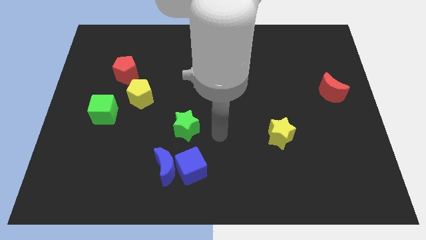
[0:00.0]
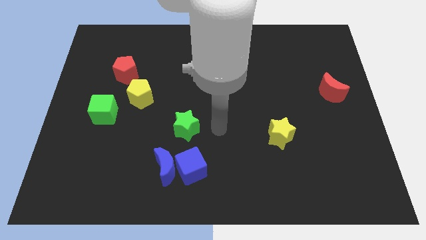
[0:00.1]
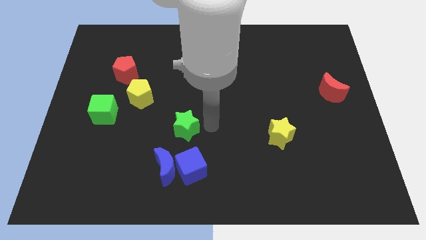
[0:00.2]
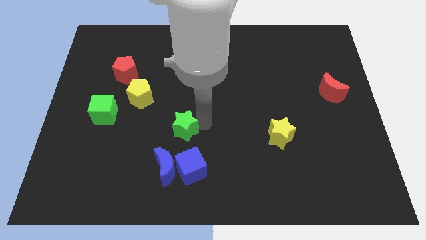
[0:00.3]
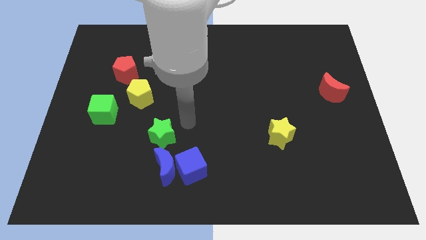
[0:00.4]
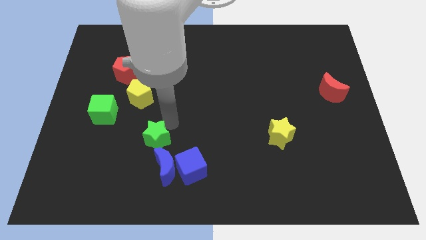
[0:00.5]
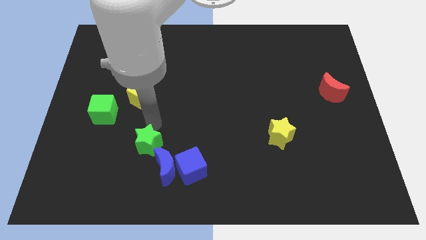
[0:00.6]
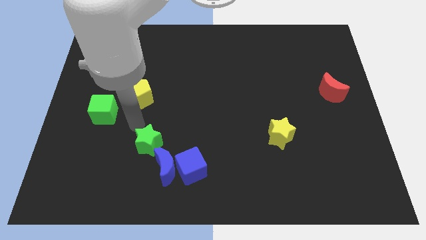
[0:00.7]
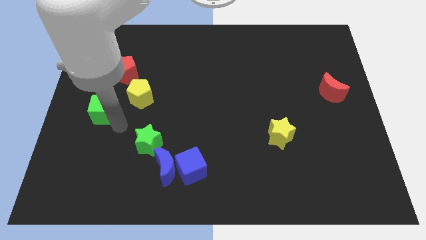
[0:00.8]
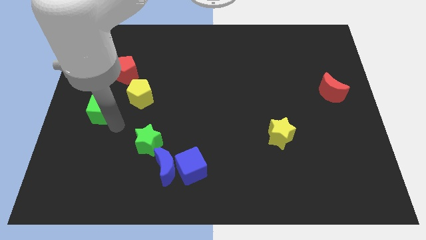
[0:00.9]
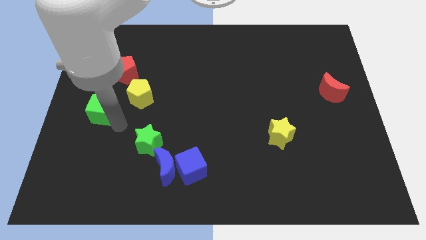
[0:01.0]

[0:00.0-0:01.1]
place your hand in between green blocks

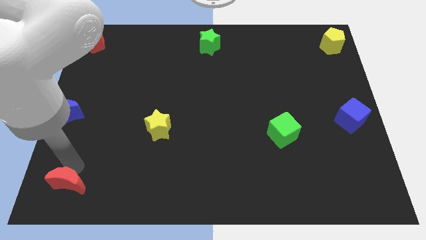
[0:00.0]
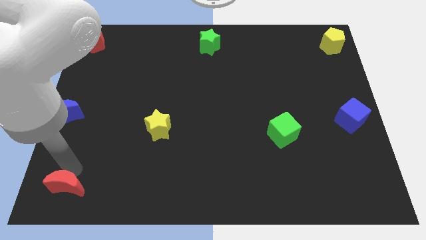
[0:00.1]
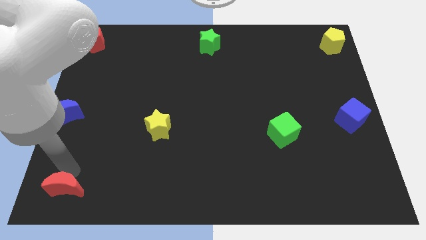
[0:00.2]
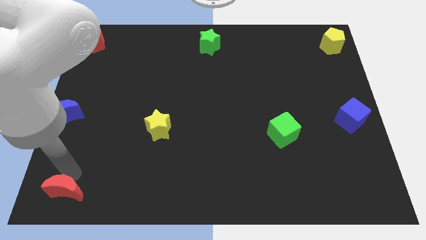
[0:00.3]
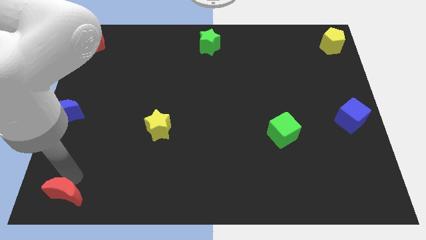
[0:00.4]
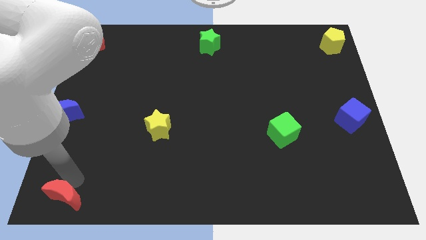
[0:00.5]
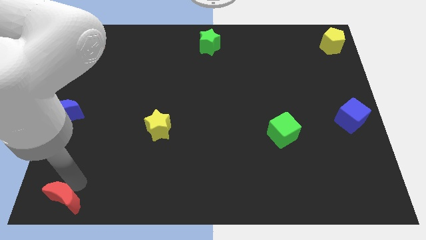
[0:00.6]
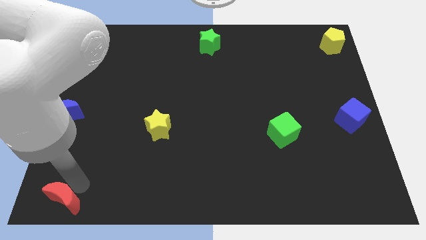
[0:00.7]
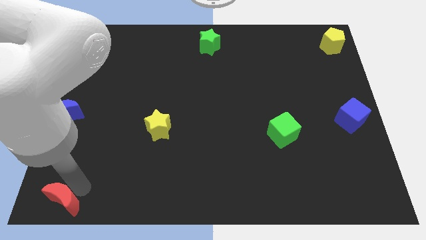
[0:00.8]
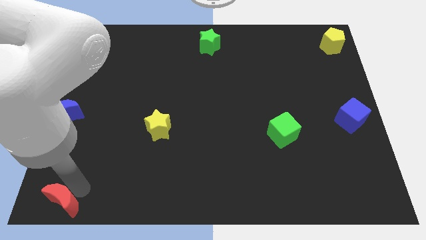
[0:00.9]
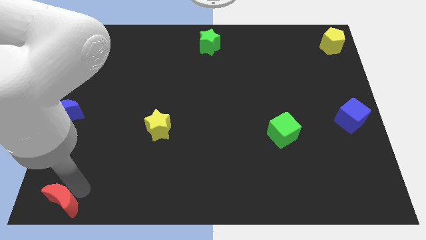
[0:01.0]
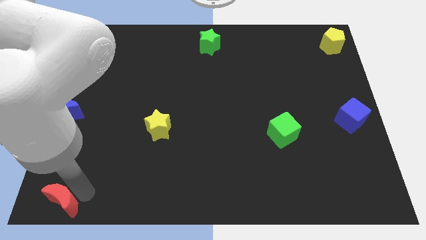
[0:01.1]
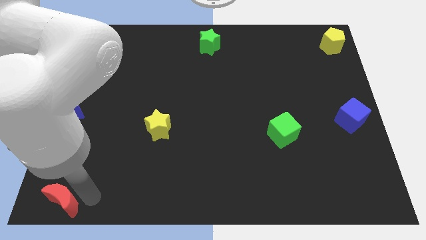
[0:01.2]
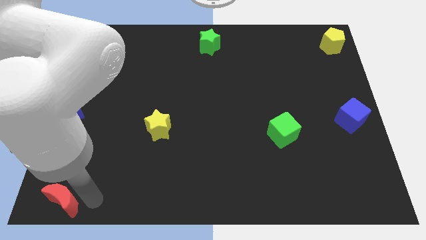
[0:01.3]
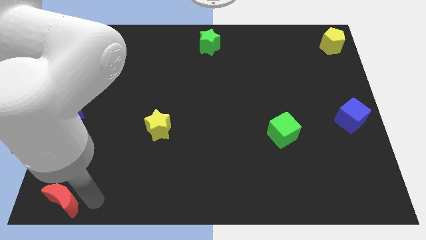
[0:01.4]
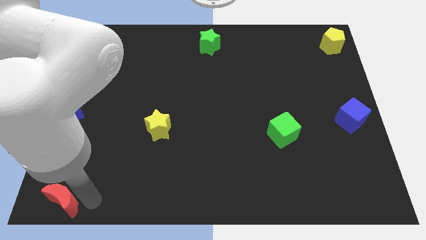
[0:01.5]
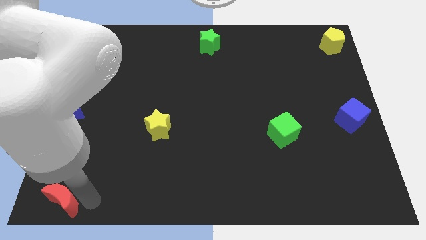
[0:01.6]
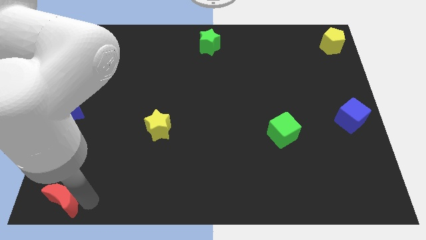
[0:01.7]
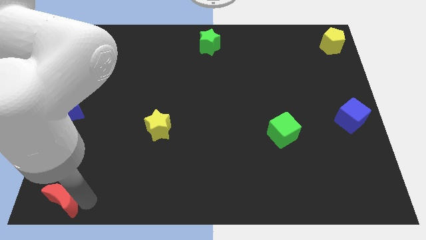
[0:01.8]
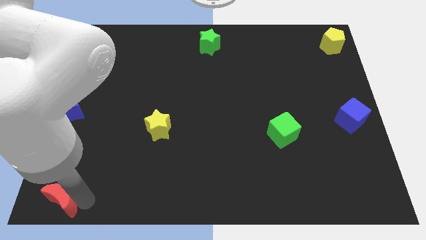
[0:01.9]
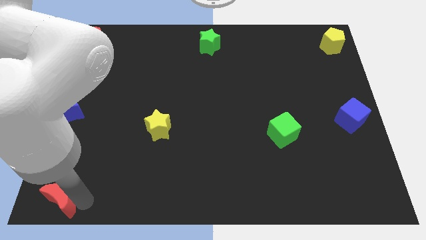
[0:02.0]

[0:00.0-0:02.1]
move red moon to the bottom left

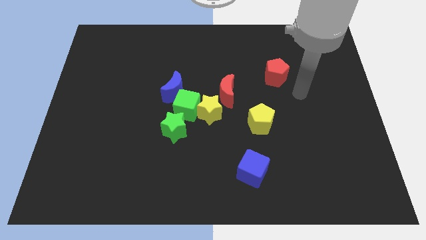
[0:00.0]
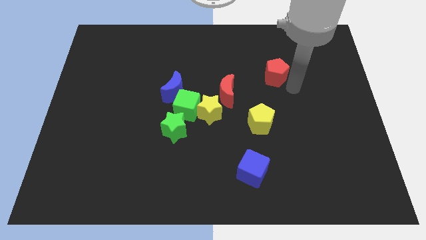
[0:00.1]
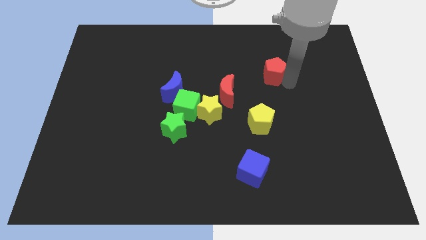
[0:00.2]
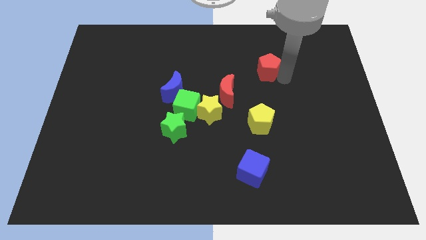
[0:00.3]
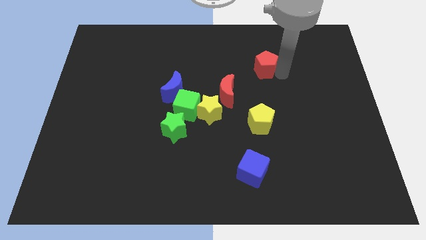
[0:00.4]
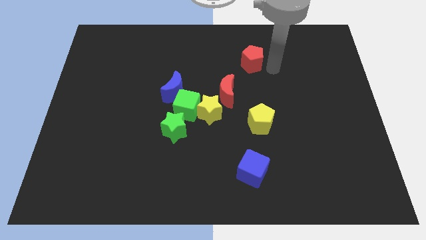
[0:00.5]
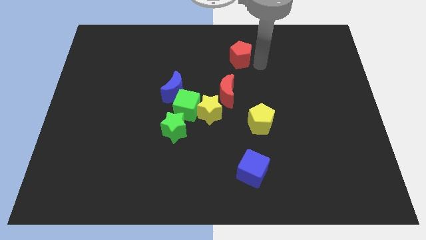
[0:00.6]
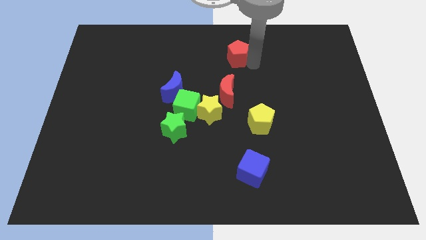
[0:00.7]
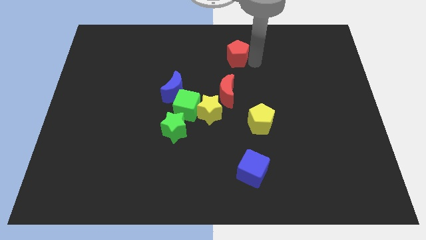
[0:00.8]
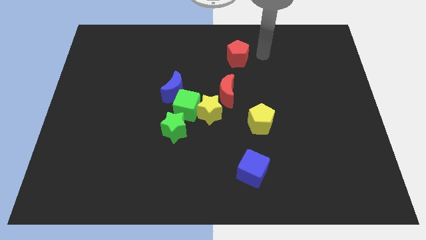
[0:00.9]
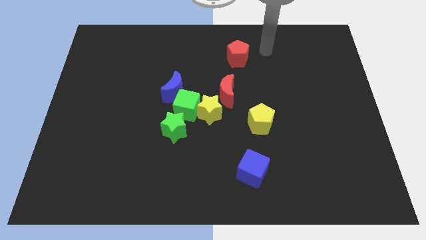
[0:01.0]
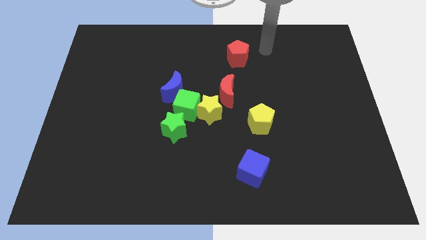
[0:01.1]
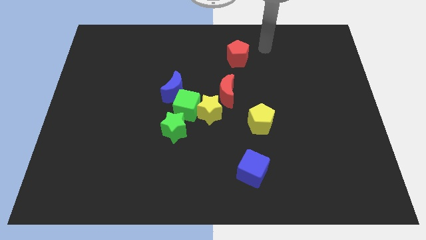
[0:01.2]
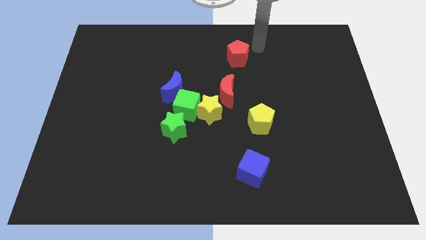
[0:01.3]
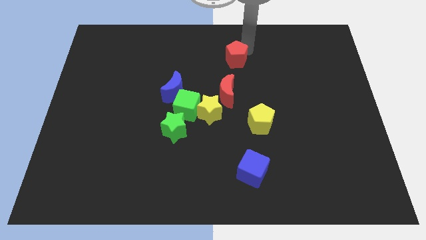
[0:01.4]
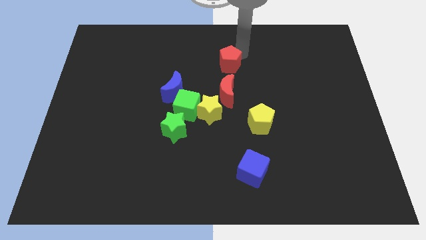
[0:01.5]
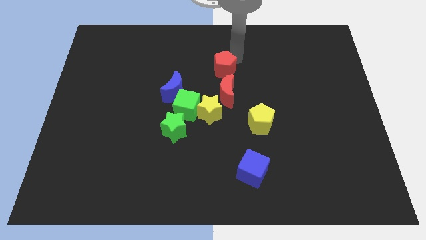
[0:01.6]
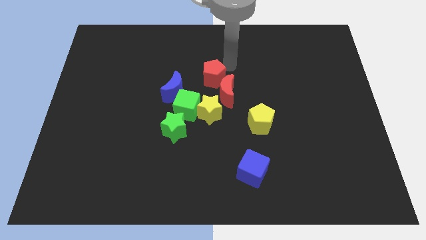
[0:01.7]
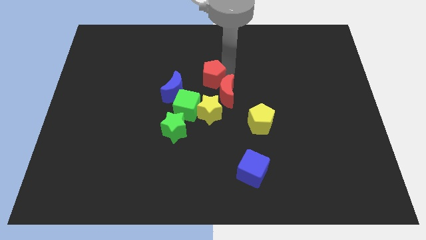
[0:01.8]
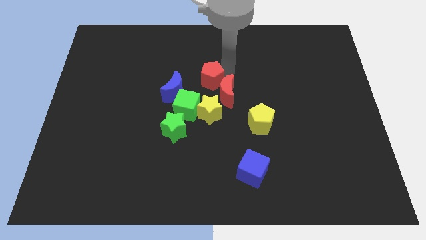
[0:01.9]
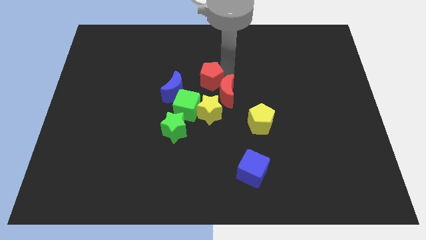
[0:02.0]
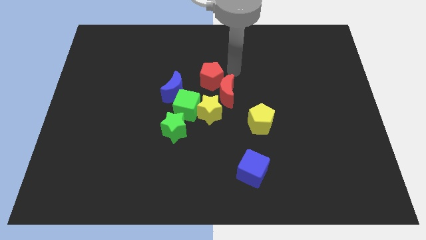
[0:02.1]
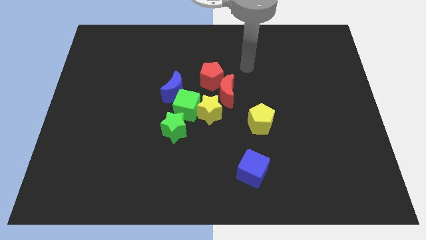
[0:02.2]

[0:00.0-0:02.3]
move the red pentagon close to the red crescent

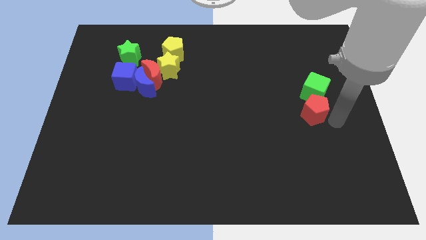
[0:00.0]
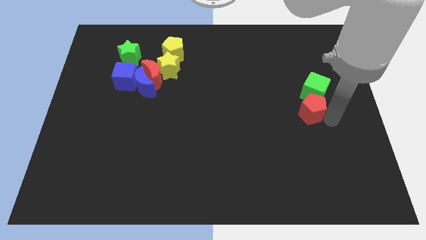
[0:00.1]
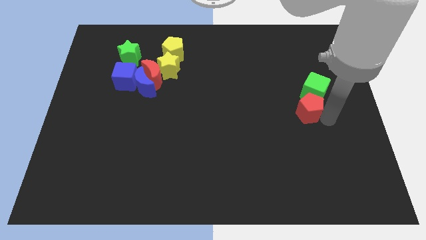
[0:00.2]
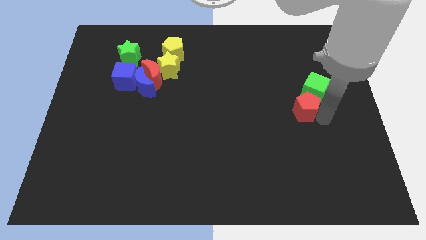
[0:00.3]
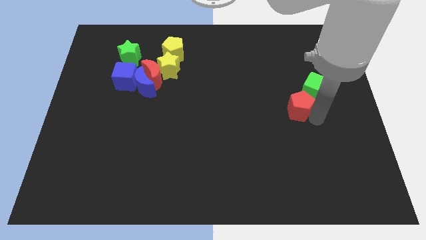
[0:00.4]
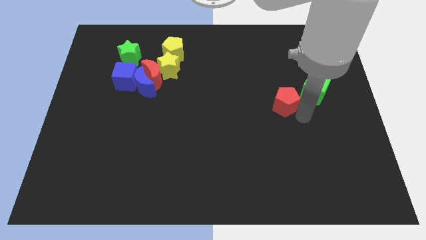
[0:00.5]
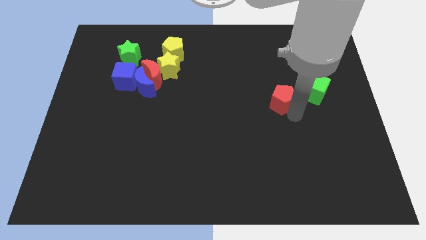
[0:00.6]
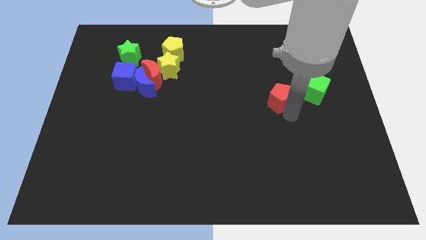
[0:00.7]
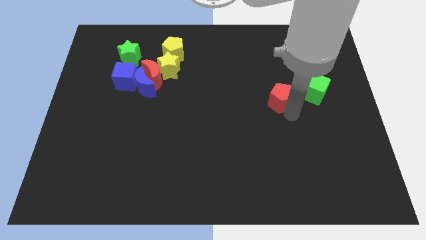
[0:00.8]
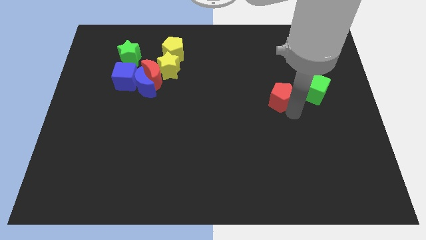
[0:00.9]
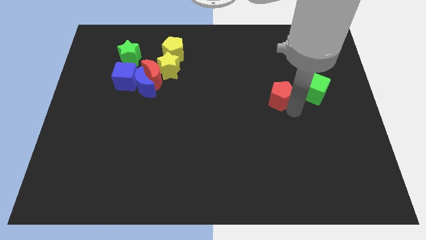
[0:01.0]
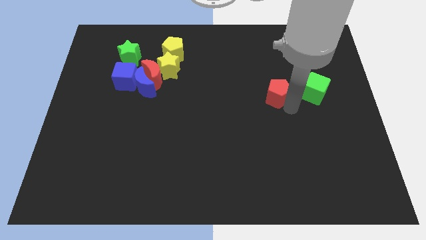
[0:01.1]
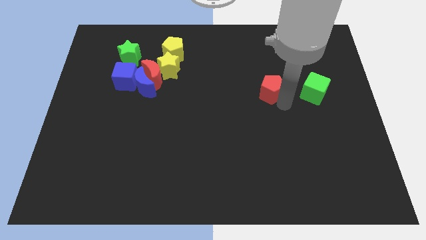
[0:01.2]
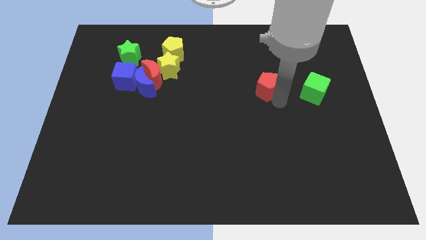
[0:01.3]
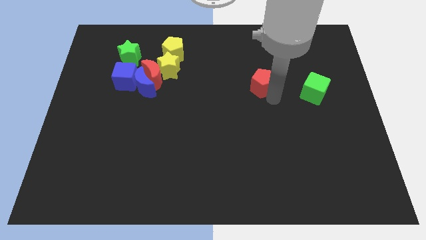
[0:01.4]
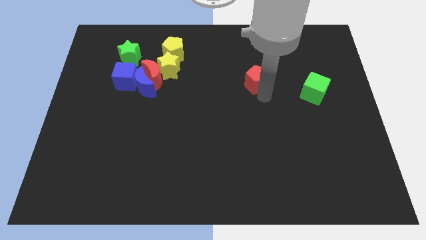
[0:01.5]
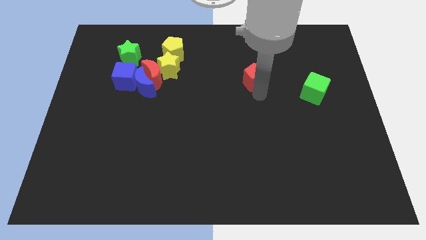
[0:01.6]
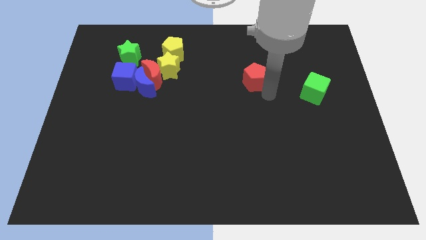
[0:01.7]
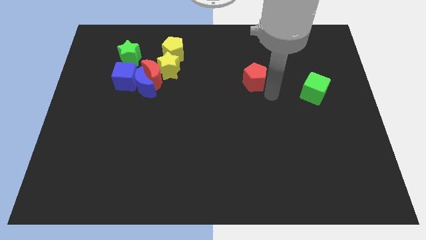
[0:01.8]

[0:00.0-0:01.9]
separate red pentagon from the green cube

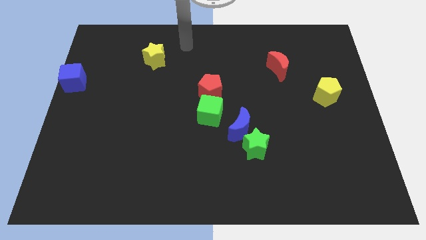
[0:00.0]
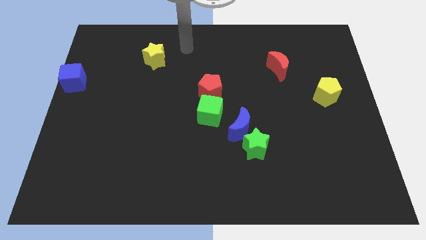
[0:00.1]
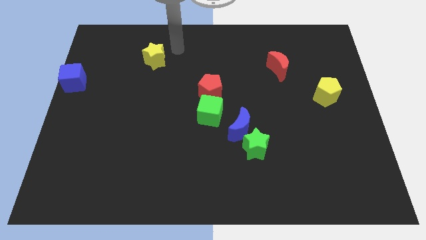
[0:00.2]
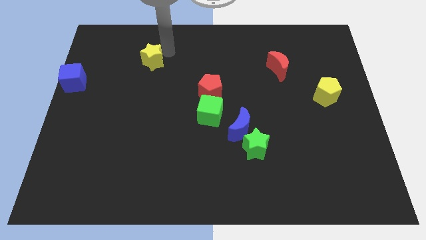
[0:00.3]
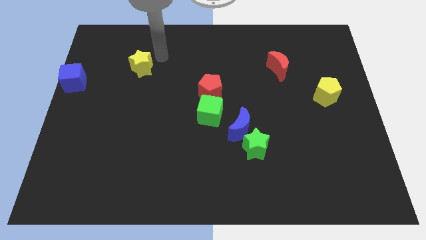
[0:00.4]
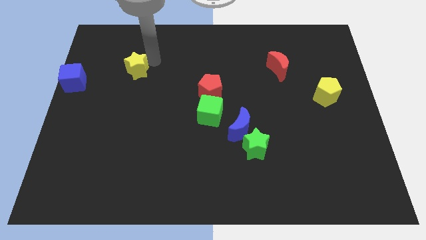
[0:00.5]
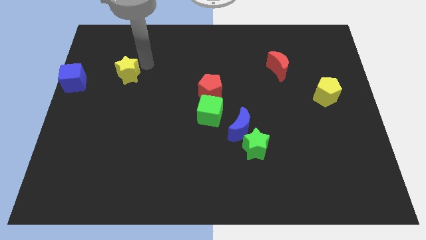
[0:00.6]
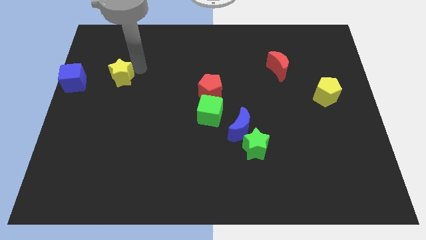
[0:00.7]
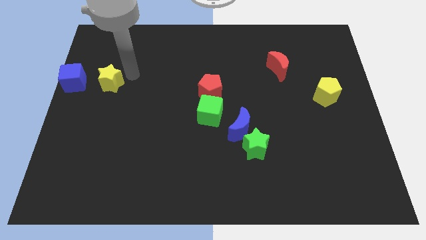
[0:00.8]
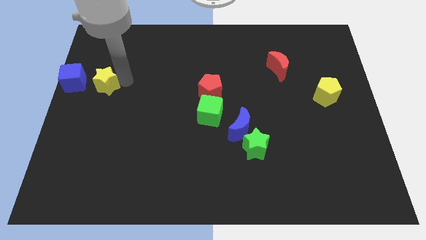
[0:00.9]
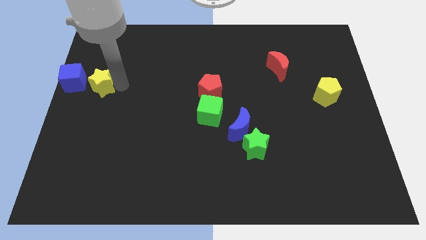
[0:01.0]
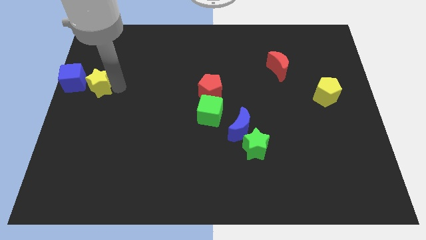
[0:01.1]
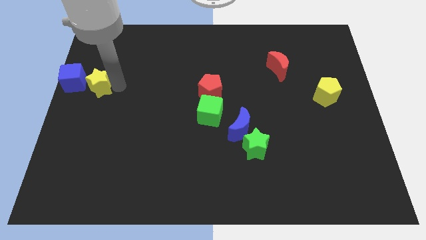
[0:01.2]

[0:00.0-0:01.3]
move the yellow star to the right side of the blue cube

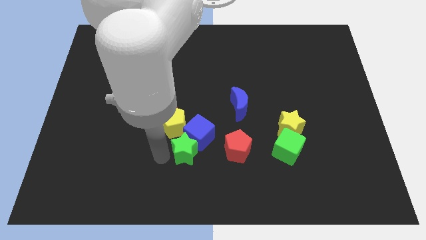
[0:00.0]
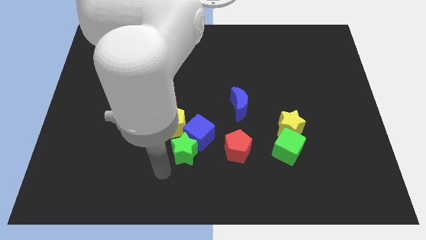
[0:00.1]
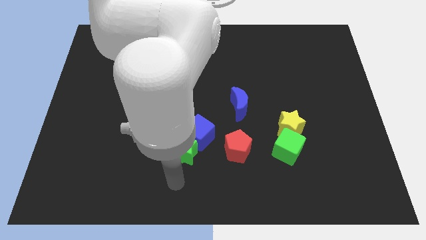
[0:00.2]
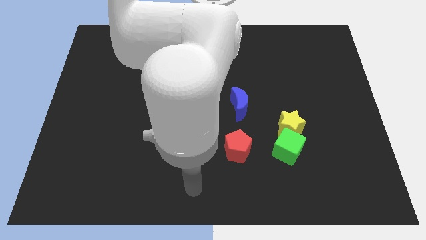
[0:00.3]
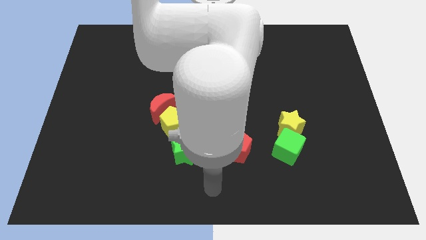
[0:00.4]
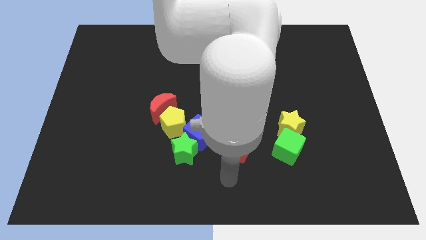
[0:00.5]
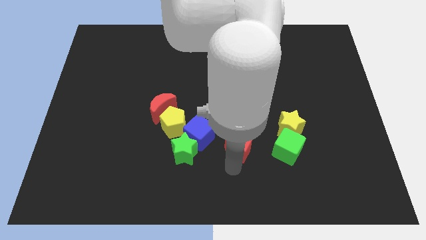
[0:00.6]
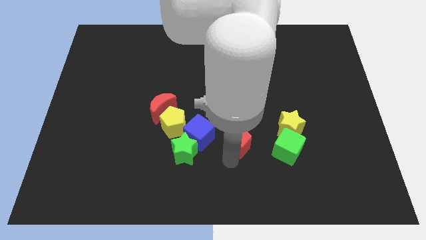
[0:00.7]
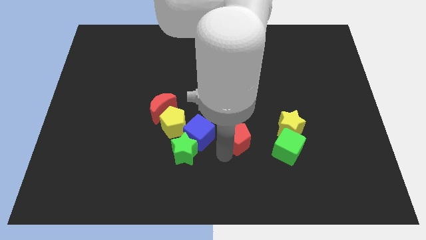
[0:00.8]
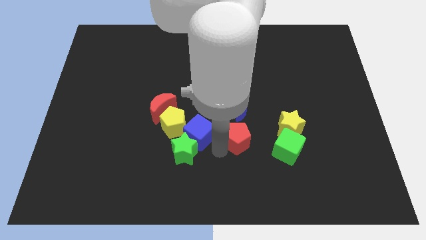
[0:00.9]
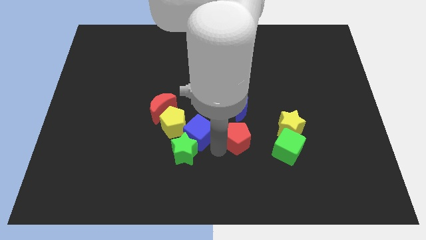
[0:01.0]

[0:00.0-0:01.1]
touch the red pentagon
